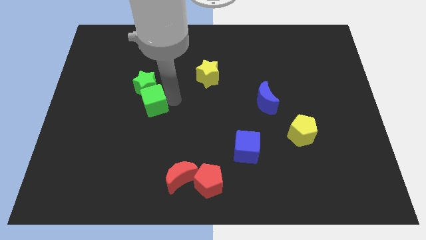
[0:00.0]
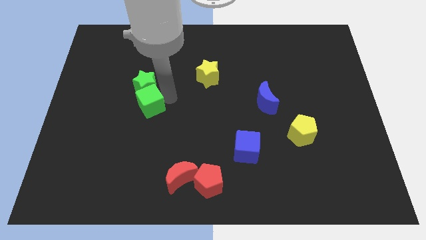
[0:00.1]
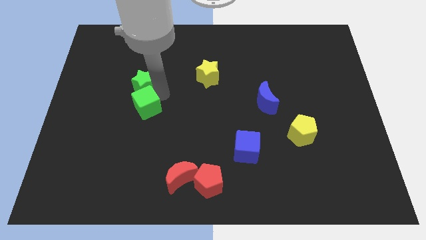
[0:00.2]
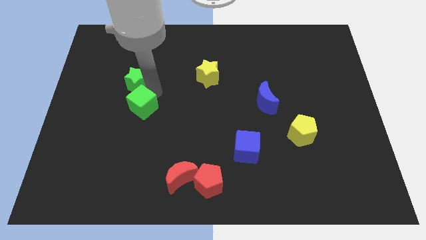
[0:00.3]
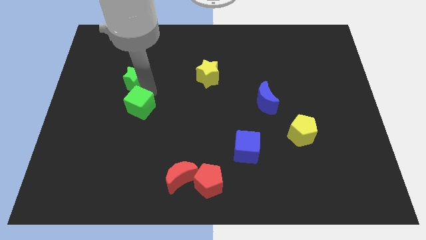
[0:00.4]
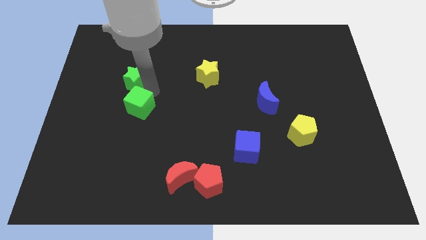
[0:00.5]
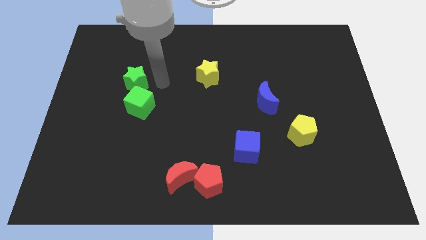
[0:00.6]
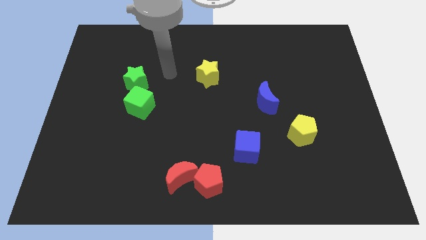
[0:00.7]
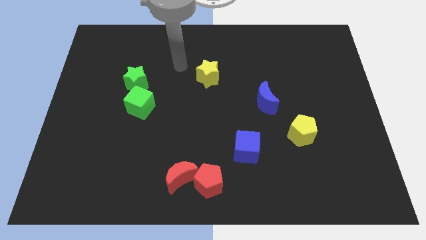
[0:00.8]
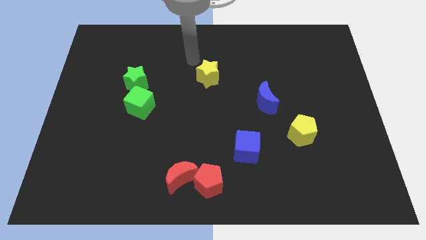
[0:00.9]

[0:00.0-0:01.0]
push the green cube and green star slightly to the left

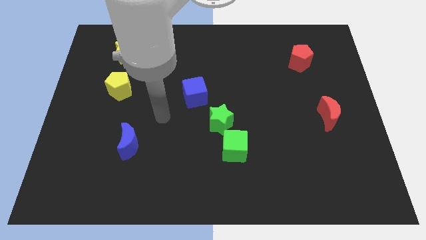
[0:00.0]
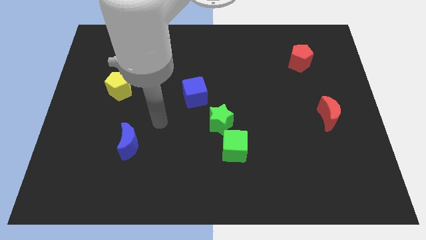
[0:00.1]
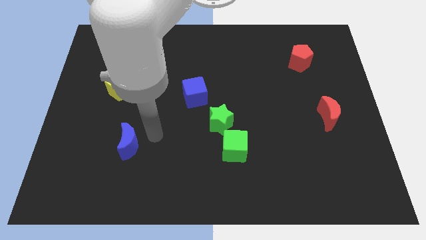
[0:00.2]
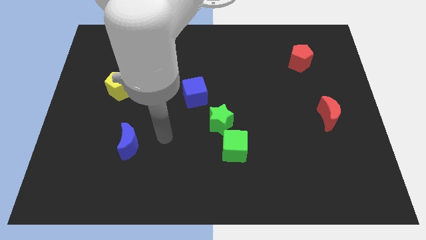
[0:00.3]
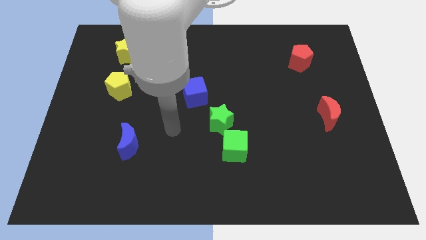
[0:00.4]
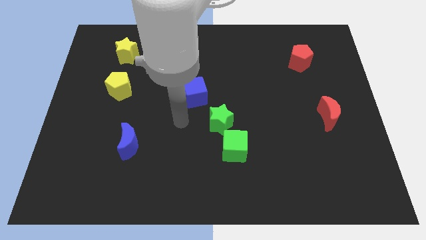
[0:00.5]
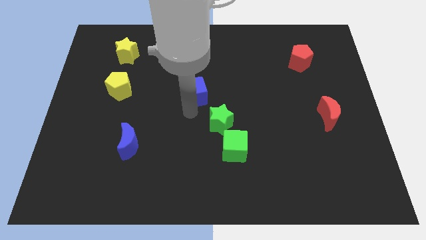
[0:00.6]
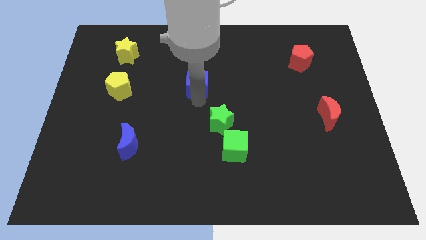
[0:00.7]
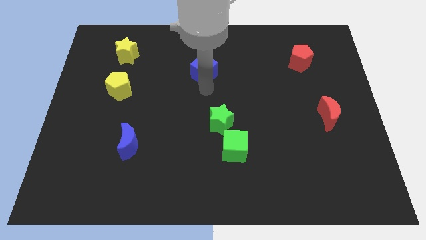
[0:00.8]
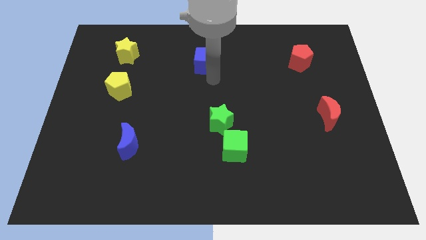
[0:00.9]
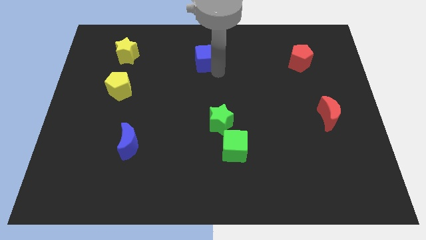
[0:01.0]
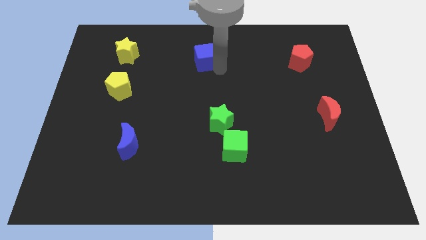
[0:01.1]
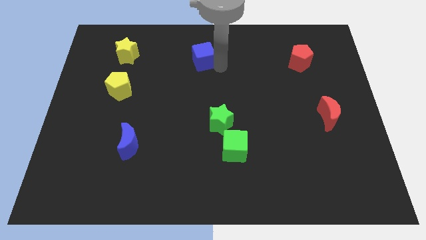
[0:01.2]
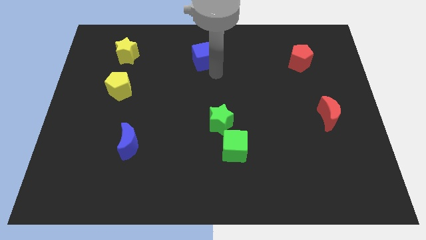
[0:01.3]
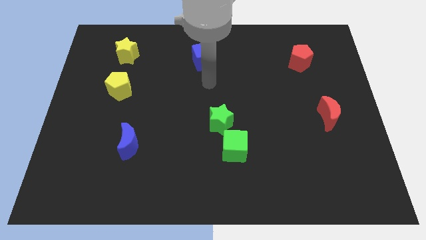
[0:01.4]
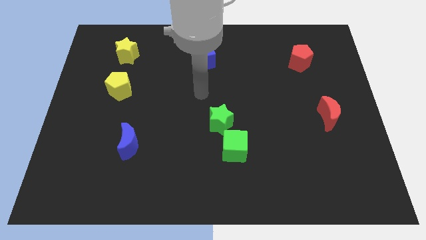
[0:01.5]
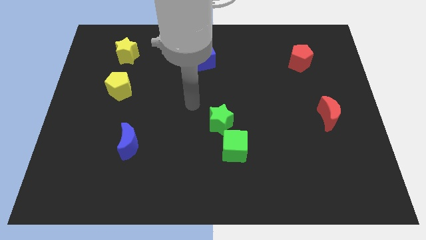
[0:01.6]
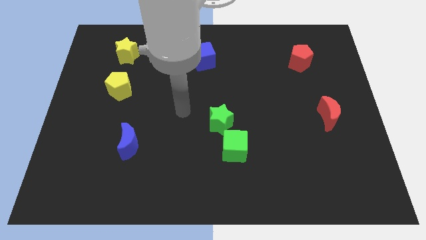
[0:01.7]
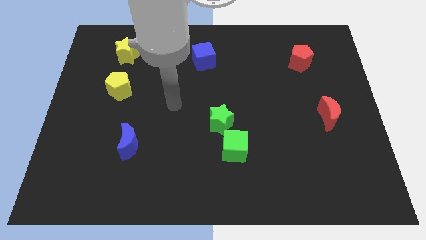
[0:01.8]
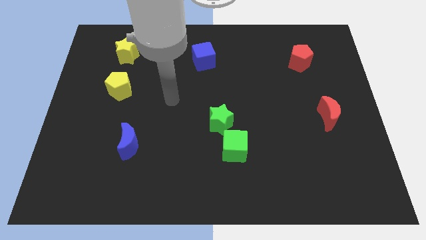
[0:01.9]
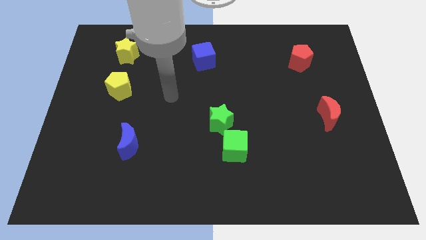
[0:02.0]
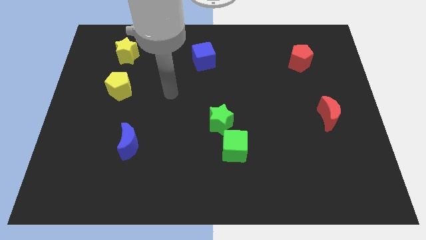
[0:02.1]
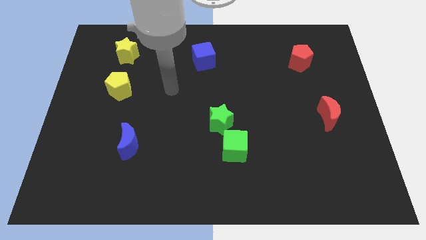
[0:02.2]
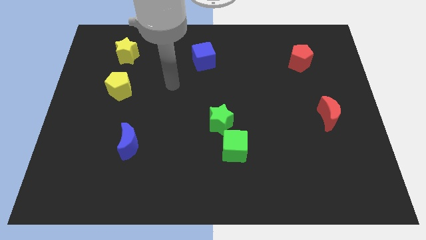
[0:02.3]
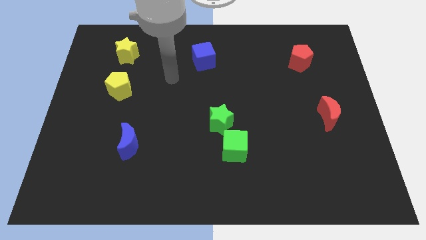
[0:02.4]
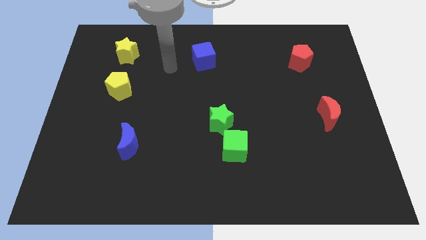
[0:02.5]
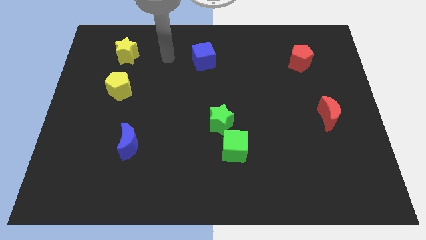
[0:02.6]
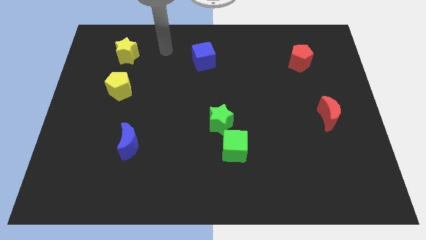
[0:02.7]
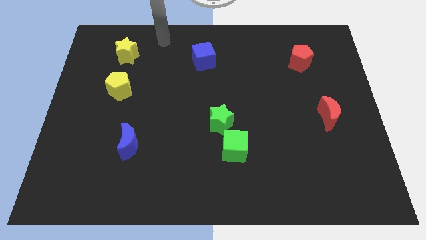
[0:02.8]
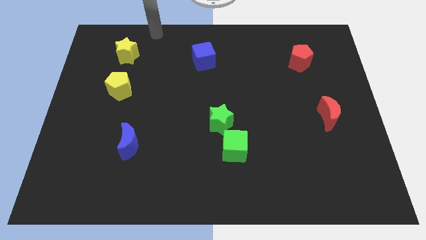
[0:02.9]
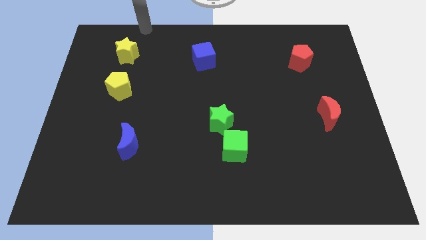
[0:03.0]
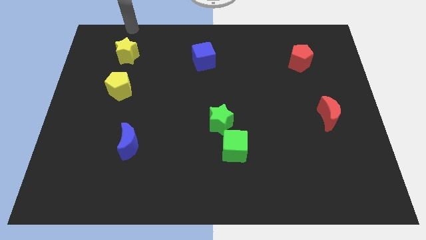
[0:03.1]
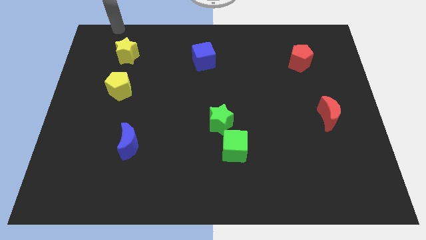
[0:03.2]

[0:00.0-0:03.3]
place the blue cube in between yellow star and red pentagon

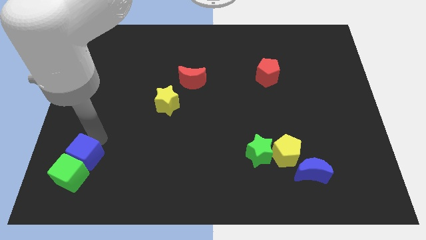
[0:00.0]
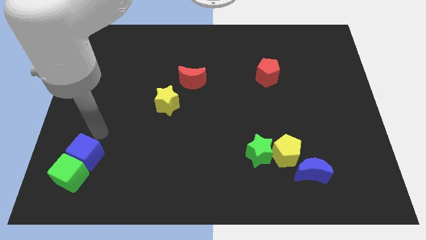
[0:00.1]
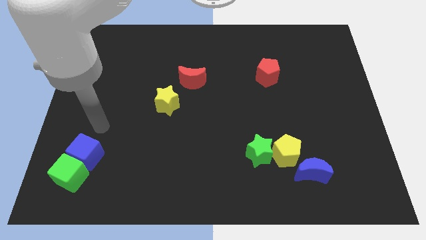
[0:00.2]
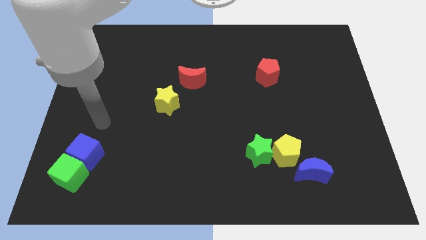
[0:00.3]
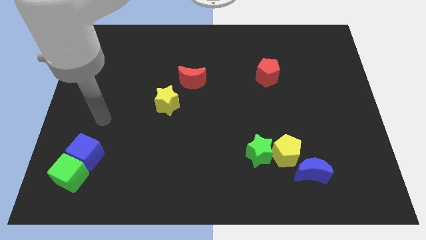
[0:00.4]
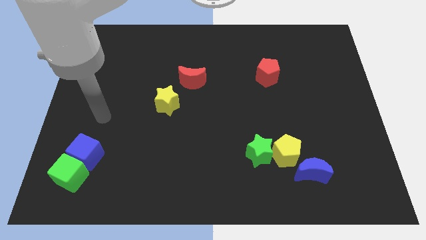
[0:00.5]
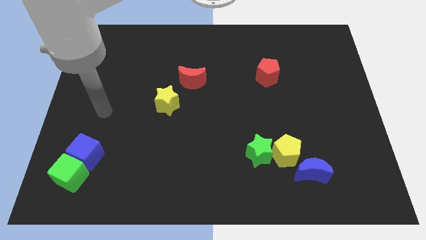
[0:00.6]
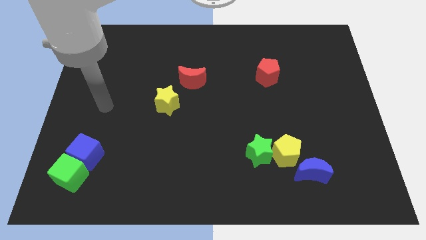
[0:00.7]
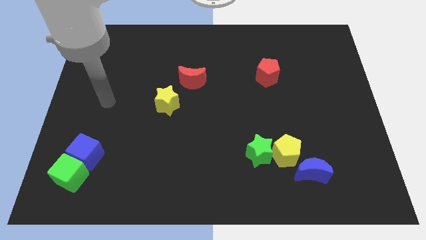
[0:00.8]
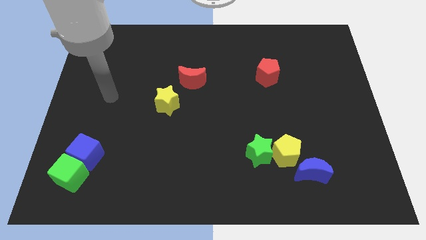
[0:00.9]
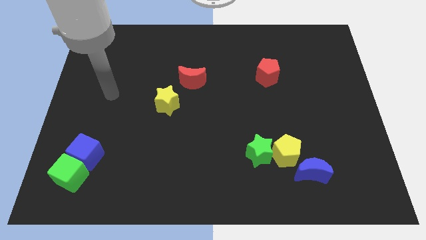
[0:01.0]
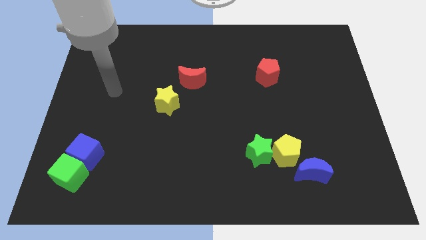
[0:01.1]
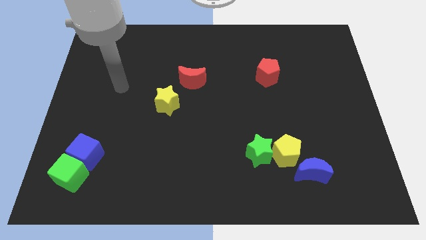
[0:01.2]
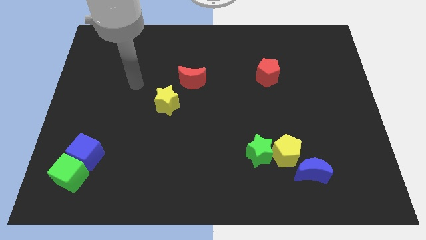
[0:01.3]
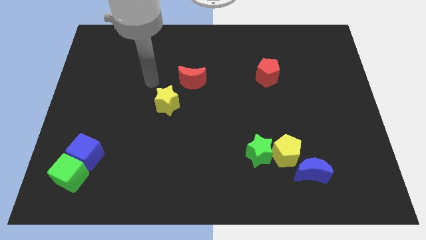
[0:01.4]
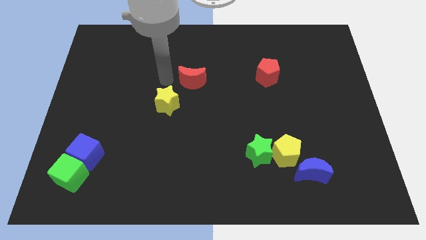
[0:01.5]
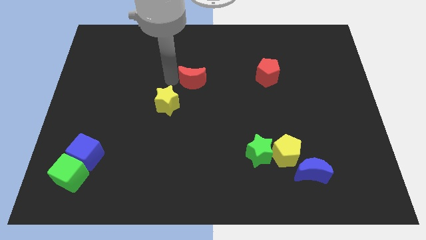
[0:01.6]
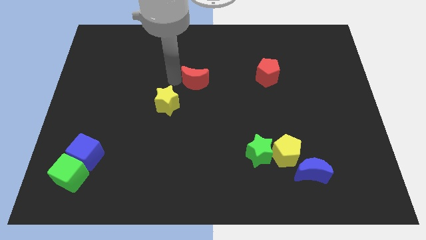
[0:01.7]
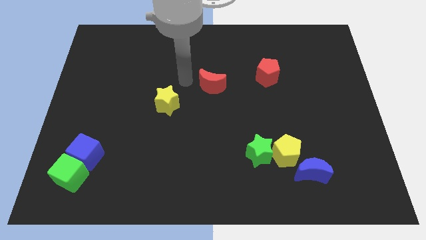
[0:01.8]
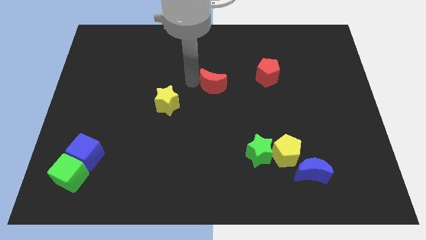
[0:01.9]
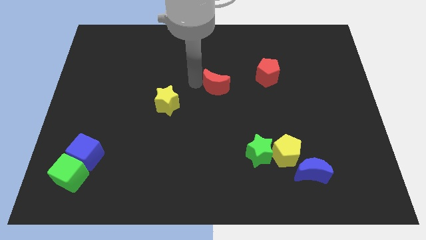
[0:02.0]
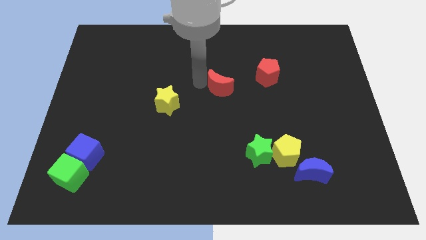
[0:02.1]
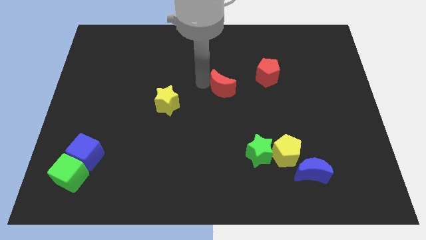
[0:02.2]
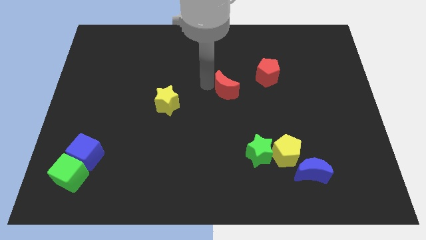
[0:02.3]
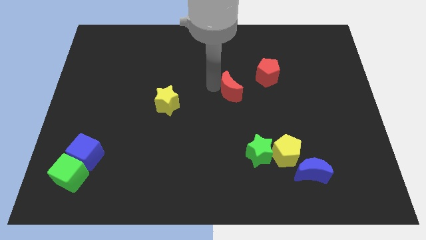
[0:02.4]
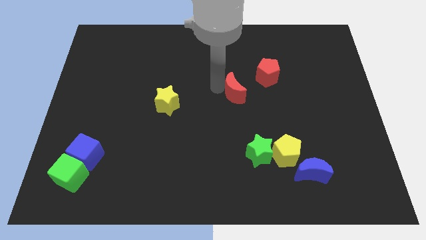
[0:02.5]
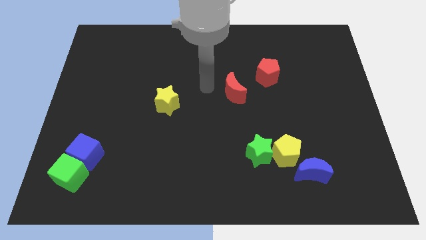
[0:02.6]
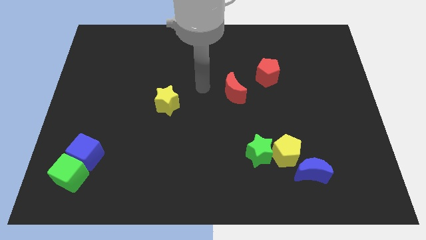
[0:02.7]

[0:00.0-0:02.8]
push the red crescent to the bottom left of the red pentagon

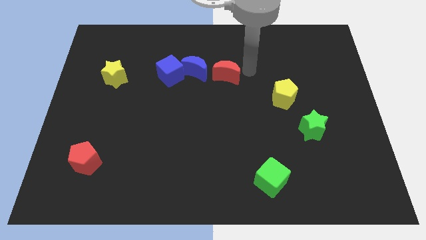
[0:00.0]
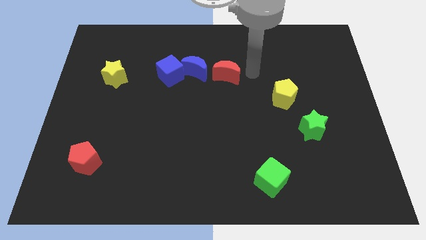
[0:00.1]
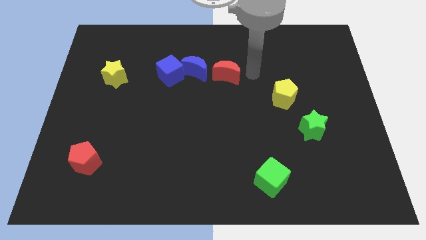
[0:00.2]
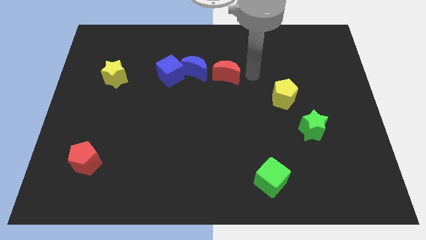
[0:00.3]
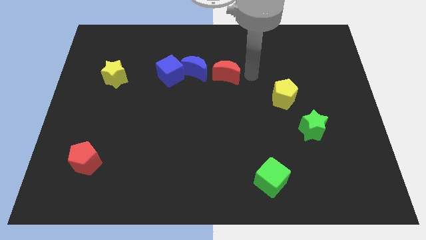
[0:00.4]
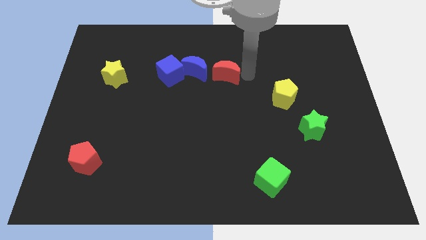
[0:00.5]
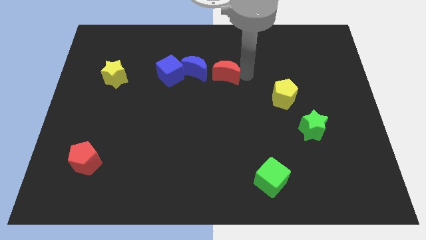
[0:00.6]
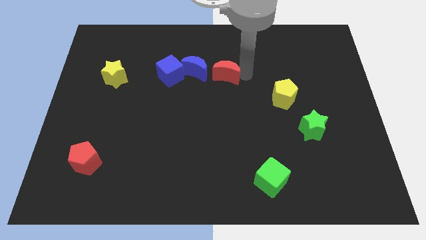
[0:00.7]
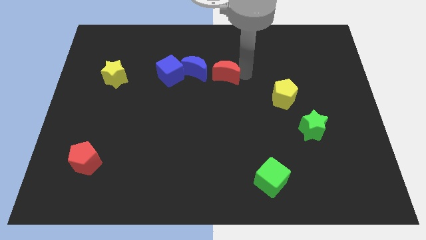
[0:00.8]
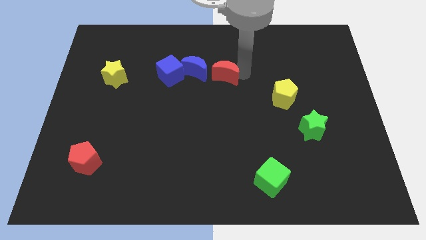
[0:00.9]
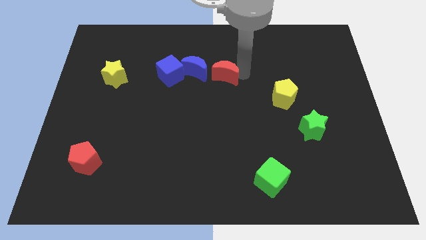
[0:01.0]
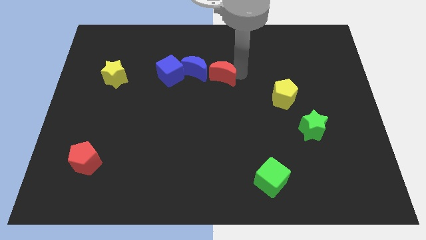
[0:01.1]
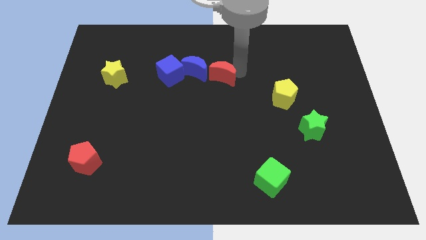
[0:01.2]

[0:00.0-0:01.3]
push the red crescent slightly towards the blue crescent

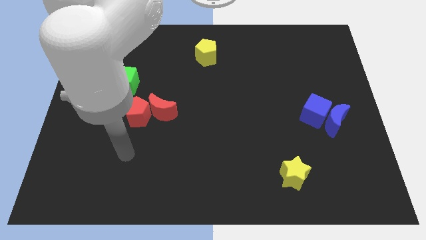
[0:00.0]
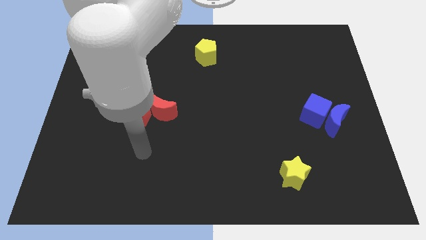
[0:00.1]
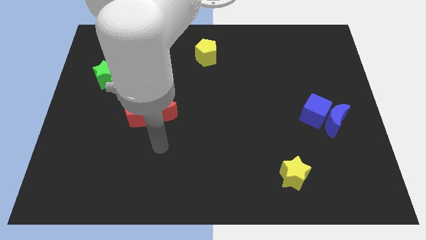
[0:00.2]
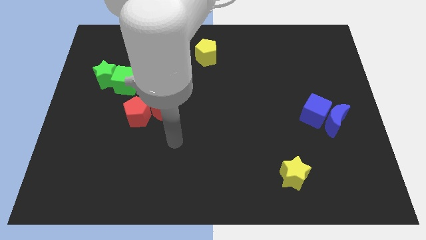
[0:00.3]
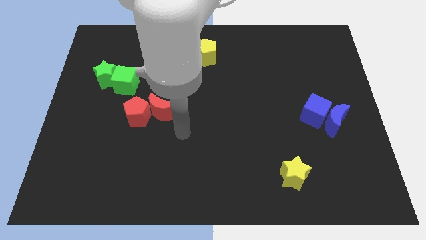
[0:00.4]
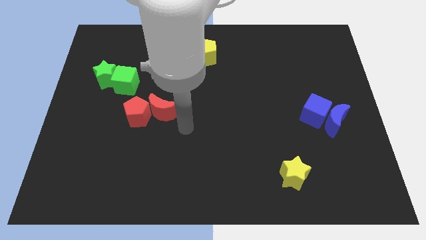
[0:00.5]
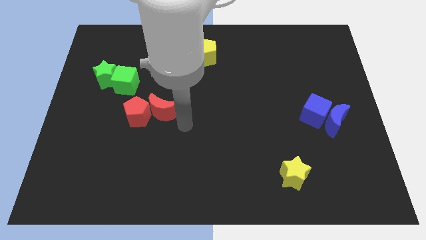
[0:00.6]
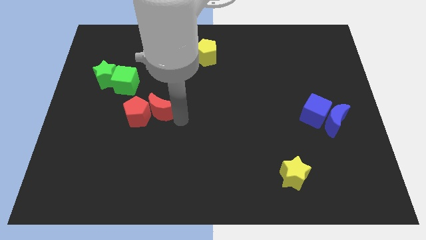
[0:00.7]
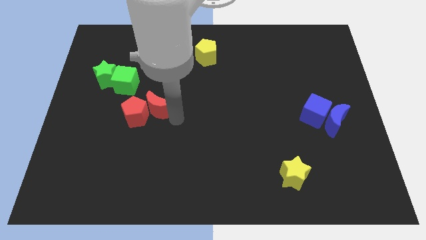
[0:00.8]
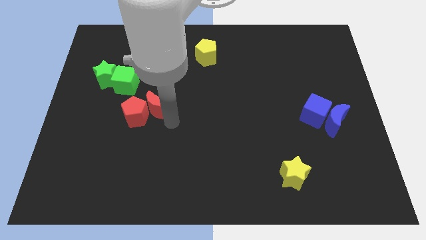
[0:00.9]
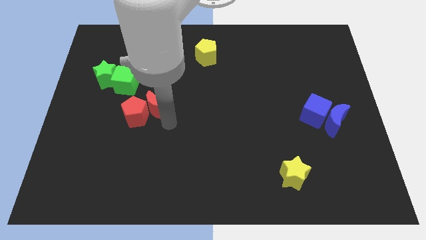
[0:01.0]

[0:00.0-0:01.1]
slightly move the red crescent
